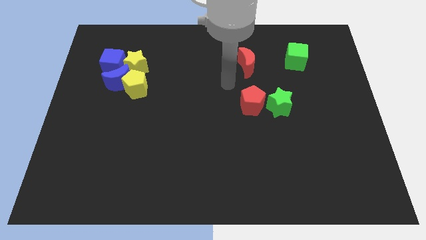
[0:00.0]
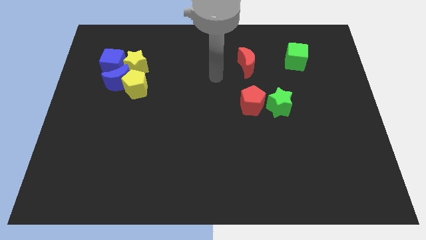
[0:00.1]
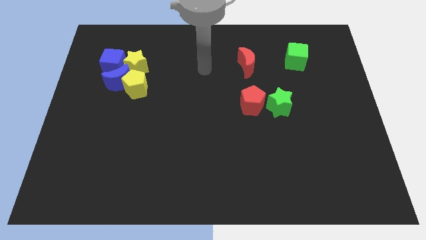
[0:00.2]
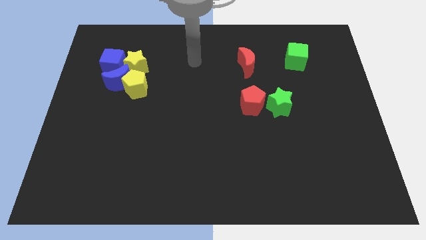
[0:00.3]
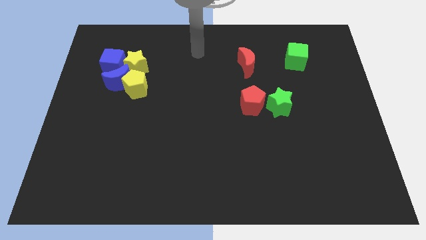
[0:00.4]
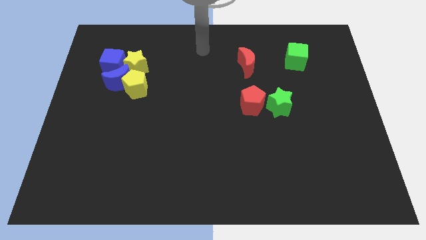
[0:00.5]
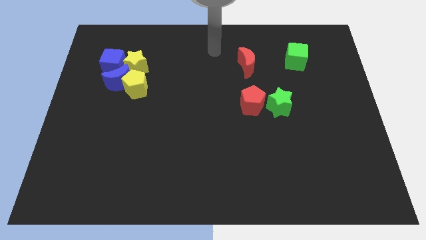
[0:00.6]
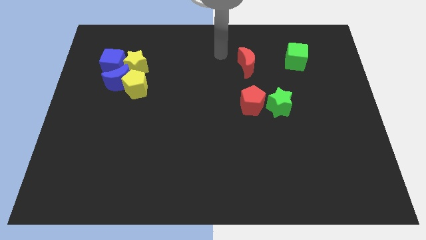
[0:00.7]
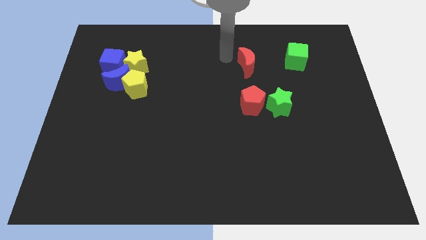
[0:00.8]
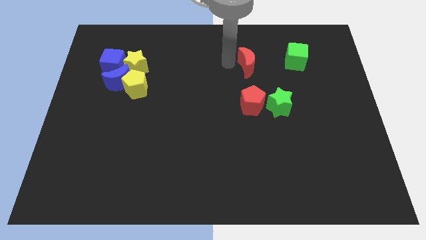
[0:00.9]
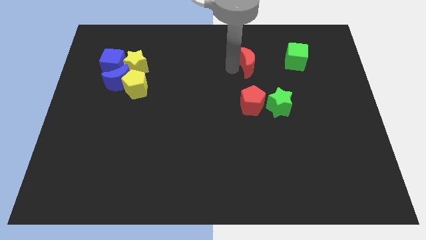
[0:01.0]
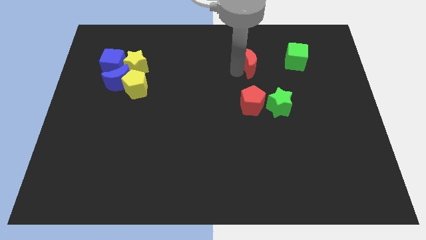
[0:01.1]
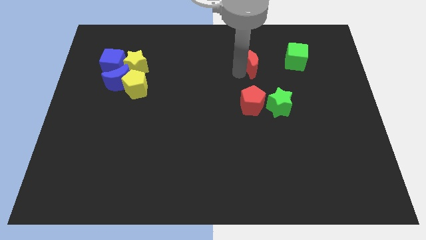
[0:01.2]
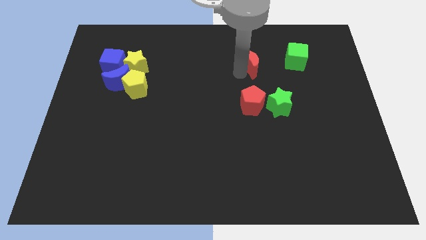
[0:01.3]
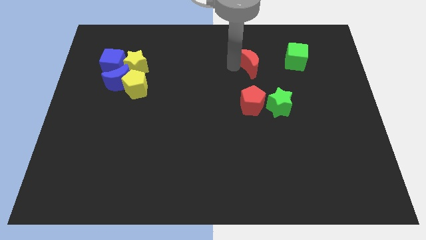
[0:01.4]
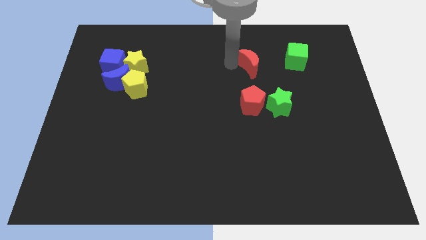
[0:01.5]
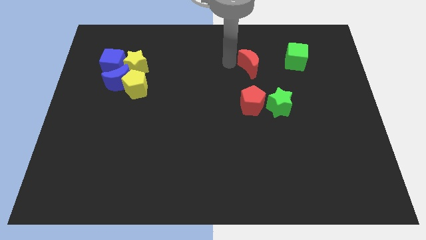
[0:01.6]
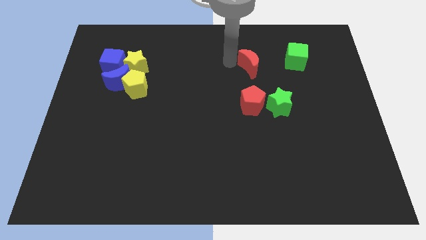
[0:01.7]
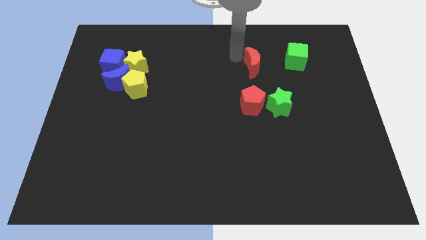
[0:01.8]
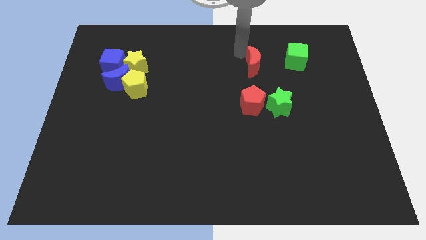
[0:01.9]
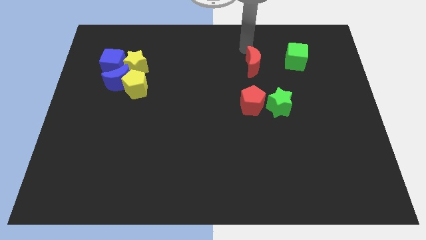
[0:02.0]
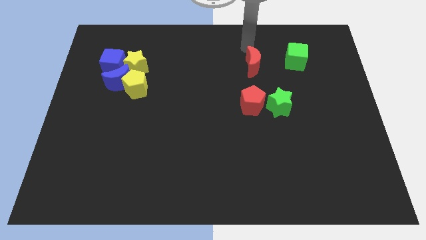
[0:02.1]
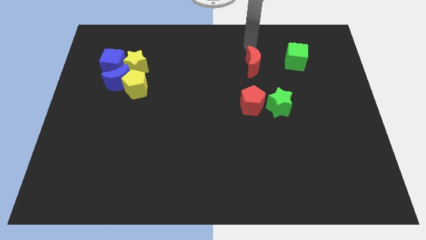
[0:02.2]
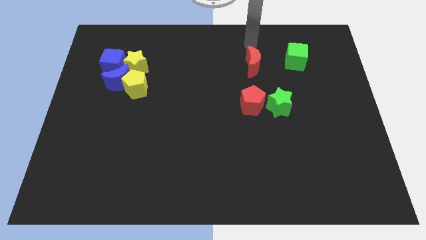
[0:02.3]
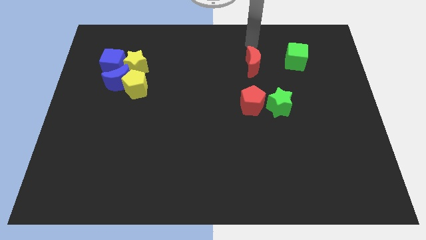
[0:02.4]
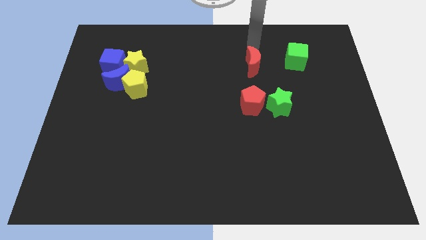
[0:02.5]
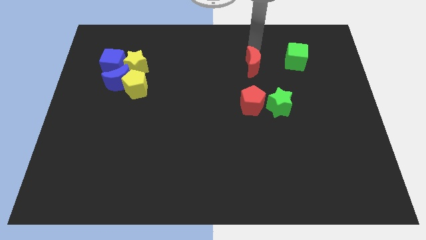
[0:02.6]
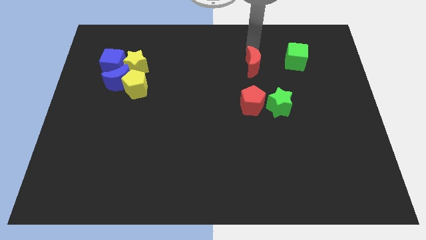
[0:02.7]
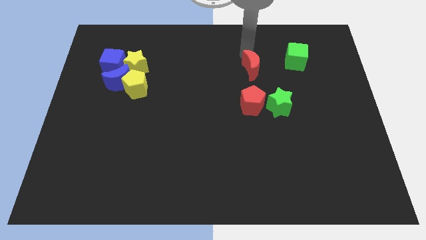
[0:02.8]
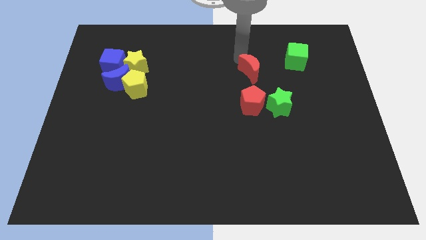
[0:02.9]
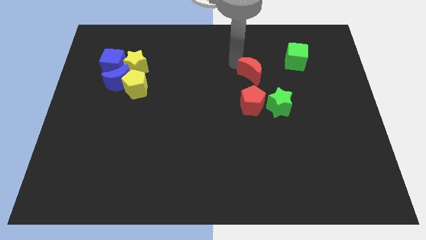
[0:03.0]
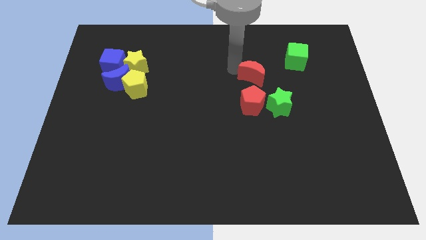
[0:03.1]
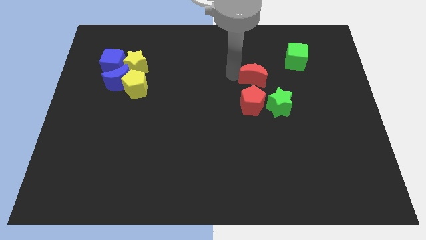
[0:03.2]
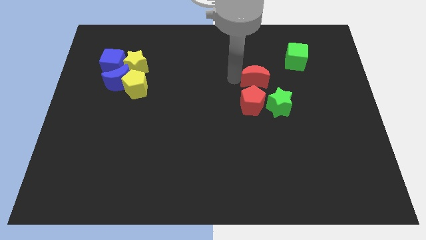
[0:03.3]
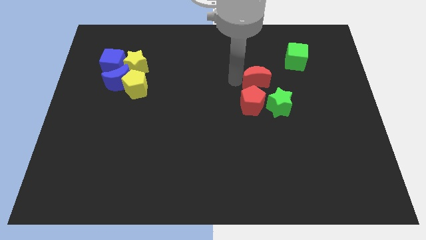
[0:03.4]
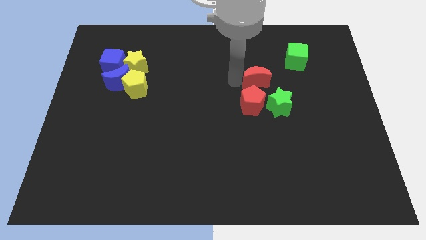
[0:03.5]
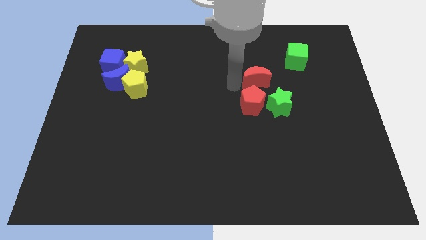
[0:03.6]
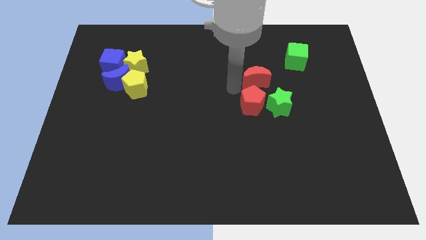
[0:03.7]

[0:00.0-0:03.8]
place the red crescent above the red pentagon

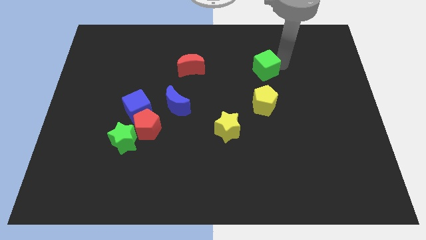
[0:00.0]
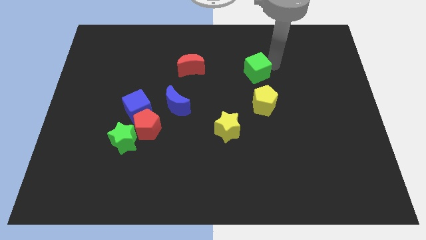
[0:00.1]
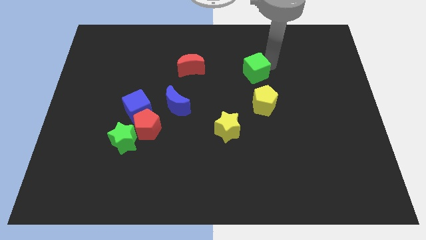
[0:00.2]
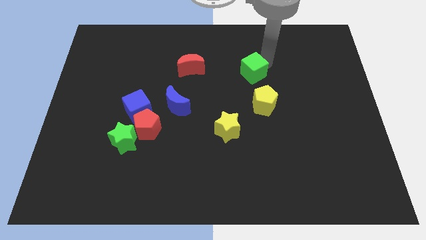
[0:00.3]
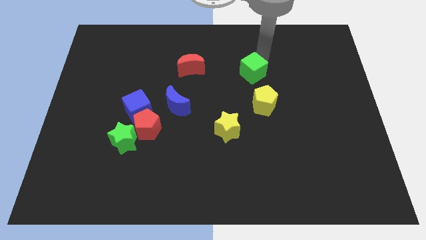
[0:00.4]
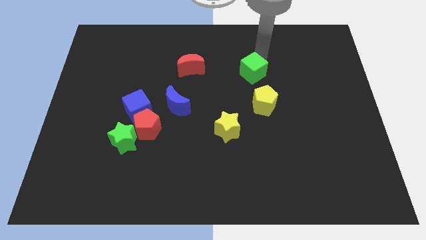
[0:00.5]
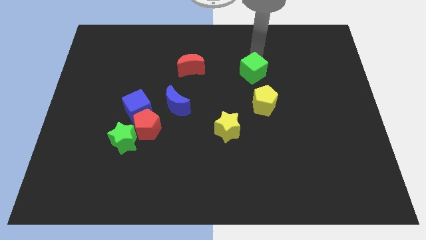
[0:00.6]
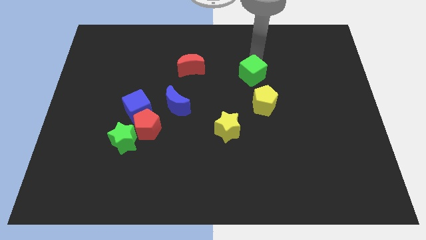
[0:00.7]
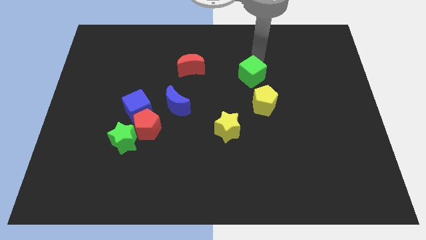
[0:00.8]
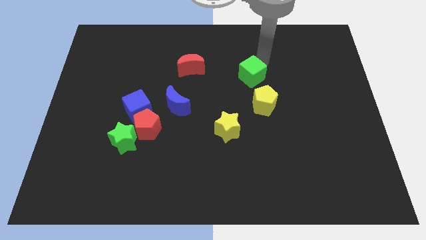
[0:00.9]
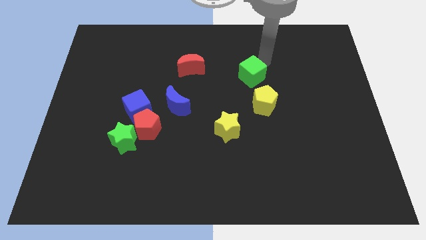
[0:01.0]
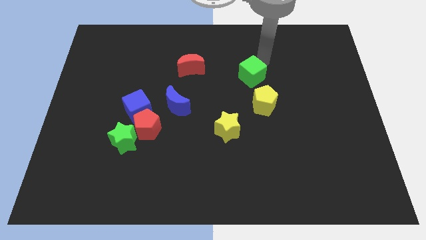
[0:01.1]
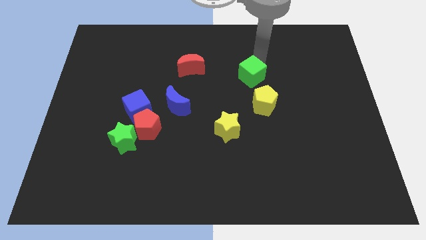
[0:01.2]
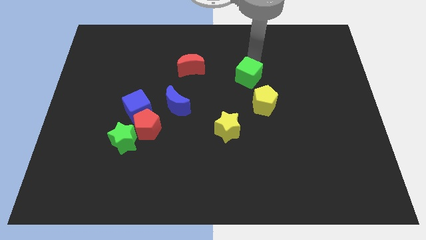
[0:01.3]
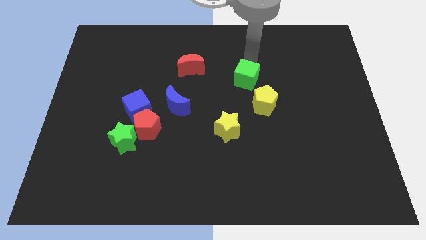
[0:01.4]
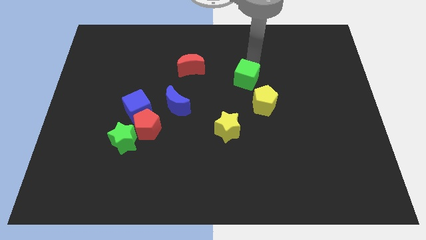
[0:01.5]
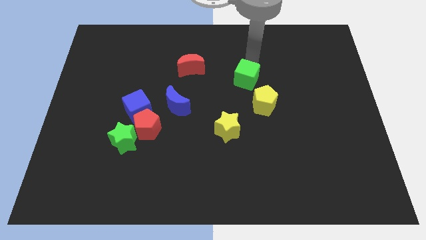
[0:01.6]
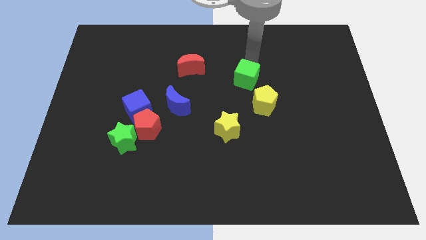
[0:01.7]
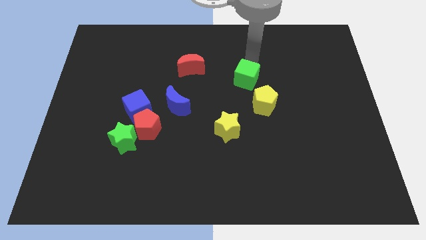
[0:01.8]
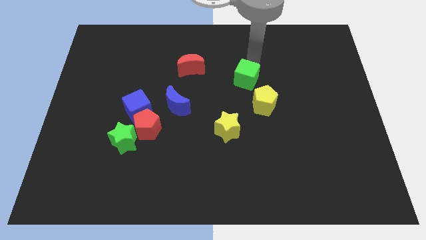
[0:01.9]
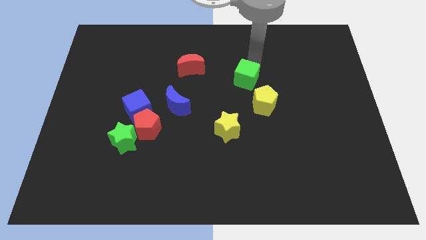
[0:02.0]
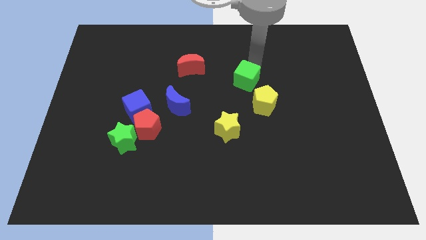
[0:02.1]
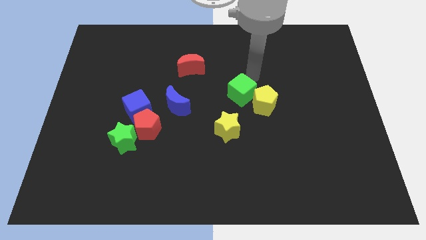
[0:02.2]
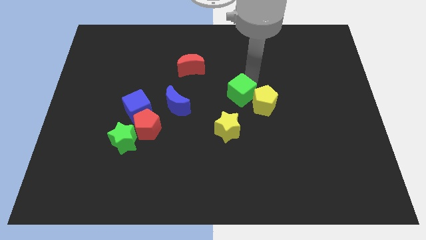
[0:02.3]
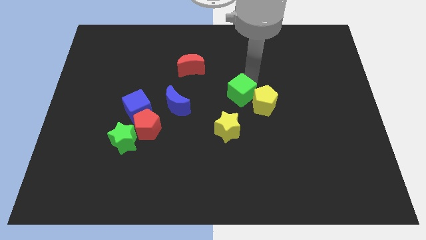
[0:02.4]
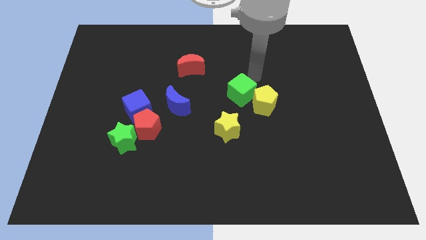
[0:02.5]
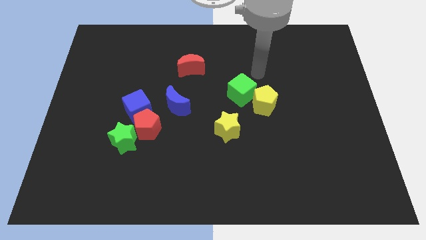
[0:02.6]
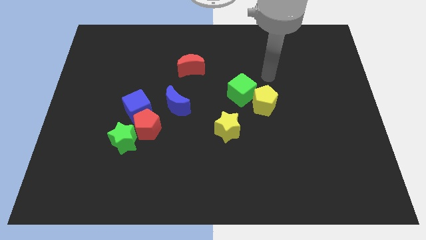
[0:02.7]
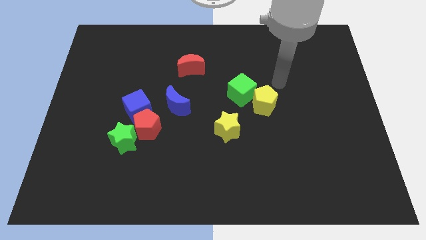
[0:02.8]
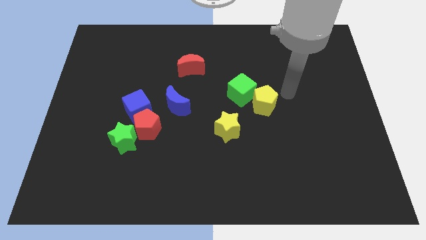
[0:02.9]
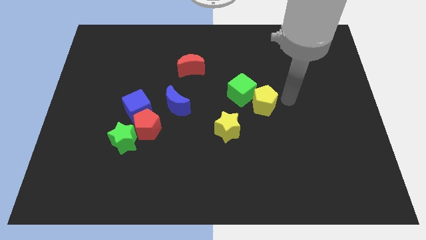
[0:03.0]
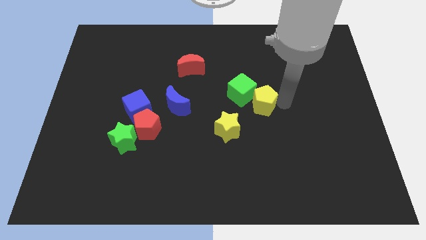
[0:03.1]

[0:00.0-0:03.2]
place the green cube to the left side of the yellow pentagon

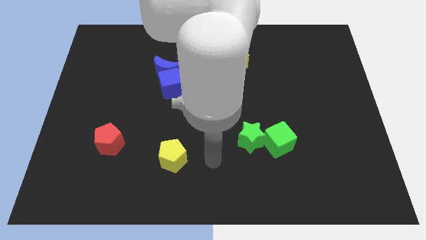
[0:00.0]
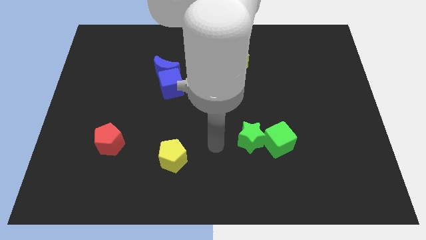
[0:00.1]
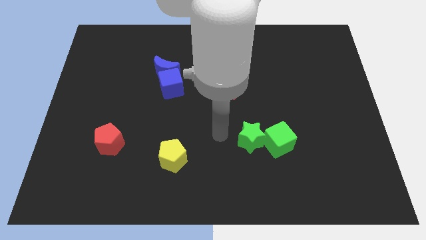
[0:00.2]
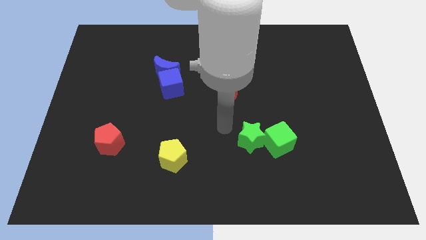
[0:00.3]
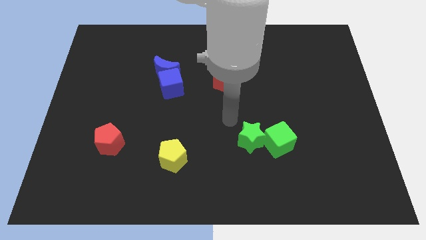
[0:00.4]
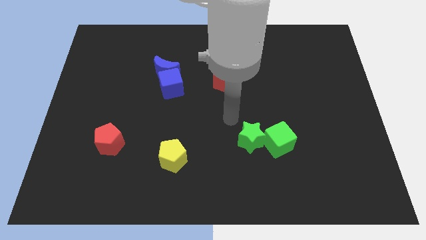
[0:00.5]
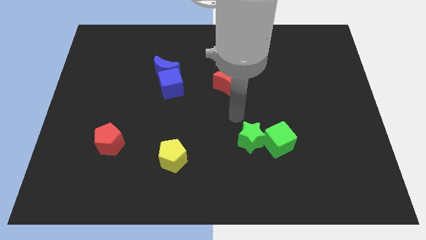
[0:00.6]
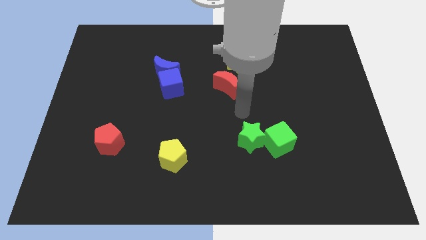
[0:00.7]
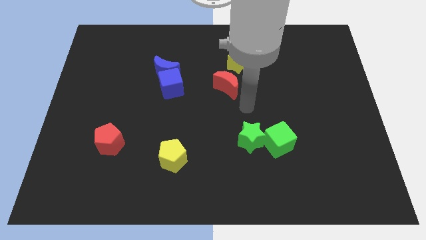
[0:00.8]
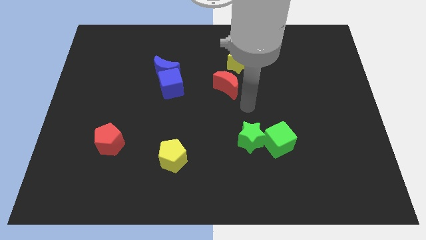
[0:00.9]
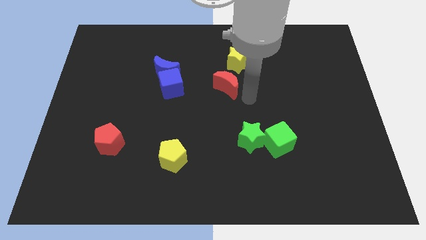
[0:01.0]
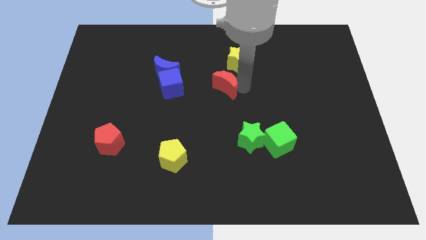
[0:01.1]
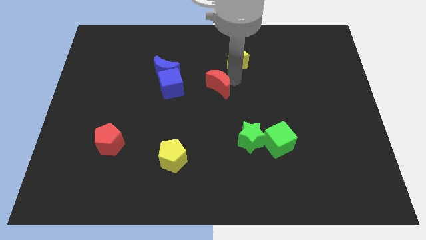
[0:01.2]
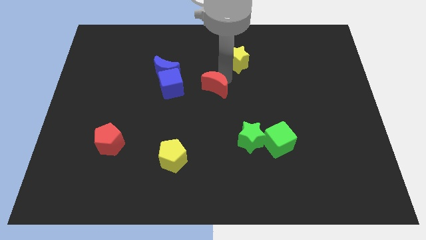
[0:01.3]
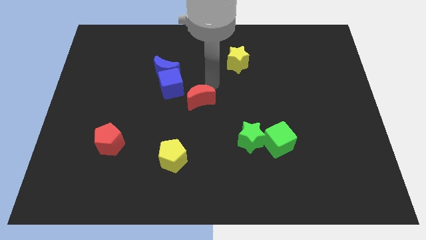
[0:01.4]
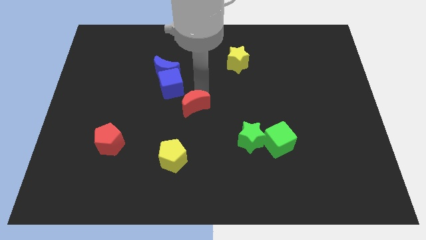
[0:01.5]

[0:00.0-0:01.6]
push the red crescent towards the blue cube

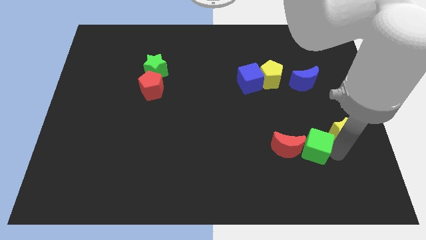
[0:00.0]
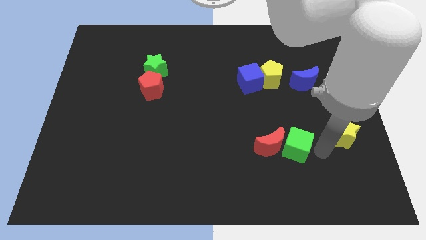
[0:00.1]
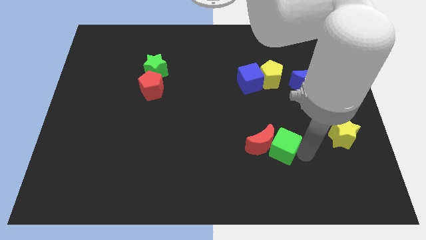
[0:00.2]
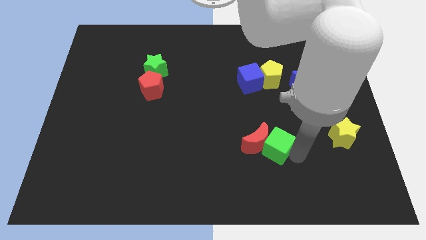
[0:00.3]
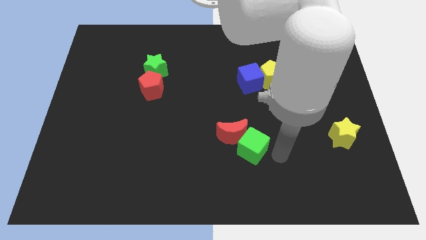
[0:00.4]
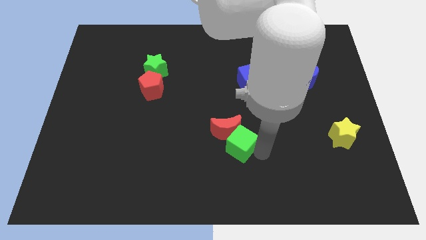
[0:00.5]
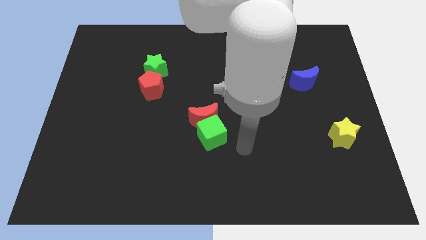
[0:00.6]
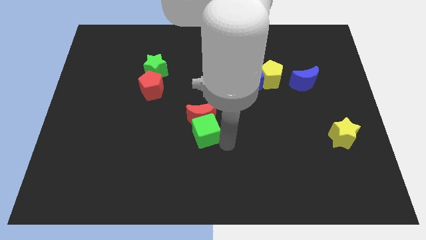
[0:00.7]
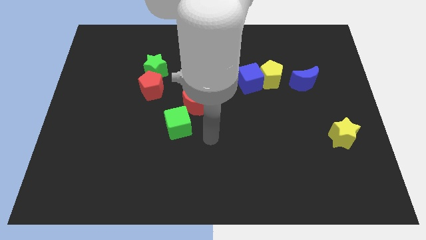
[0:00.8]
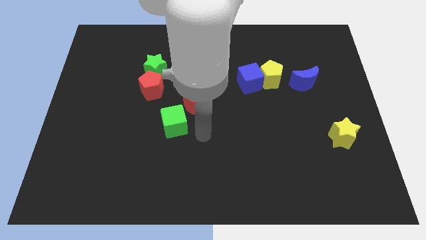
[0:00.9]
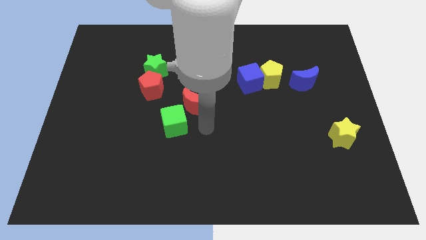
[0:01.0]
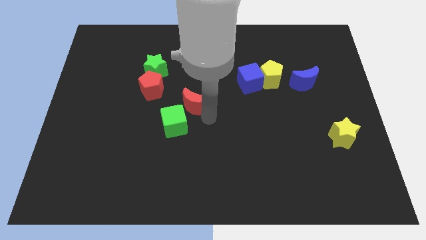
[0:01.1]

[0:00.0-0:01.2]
drag green cube towards left side of the board
